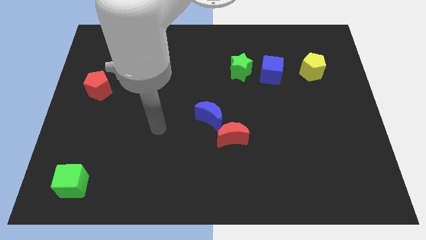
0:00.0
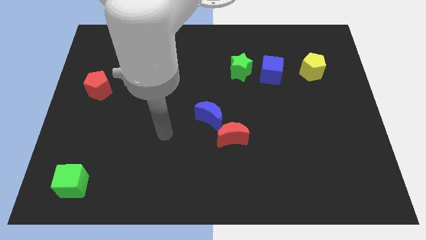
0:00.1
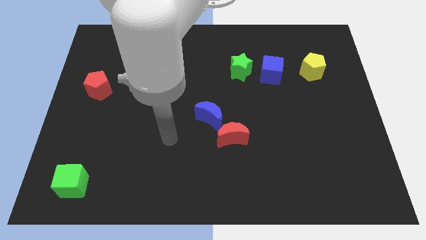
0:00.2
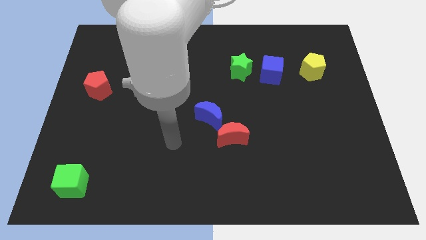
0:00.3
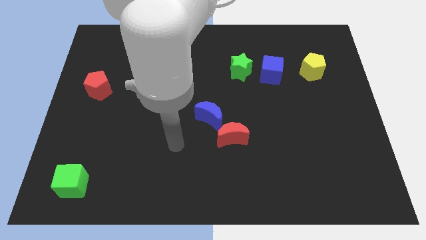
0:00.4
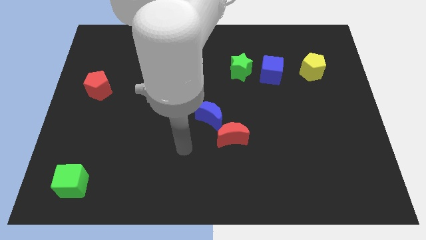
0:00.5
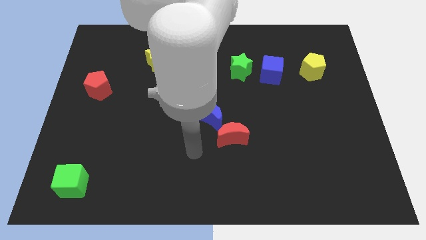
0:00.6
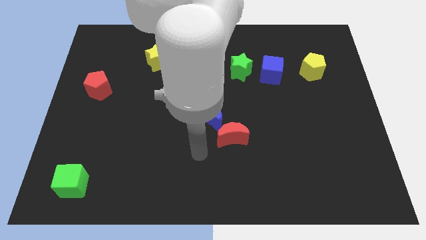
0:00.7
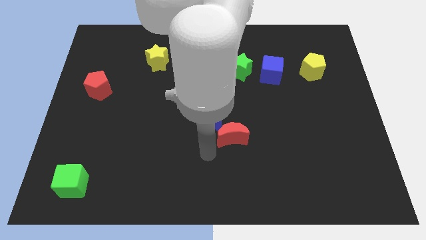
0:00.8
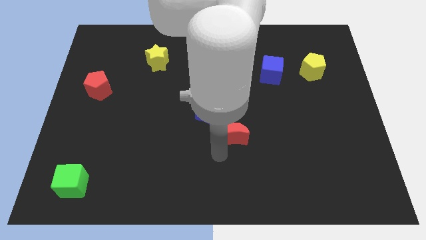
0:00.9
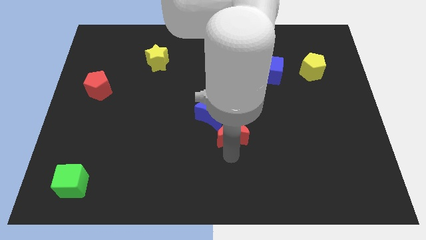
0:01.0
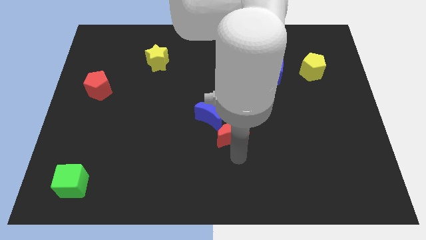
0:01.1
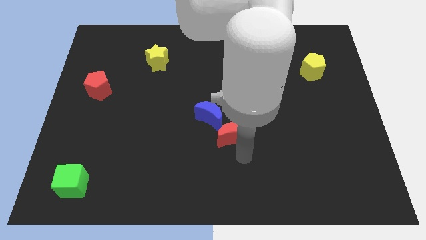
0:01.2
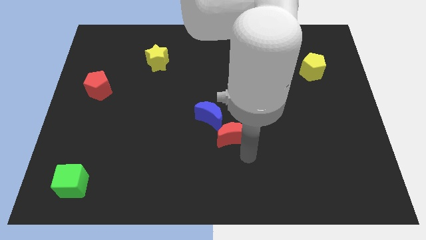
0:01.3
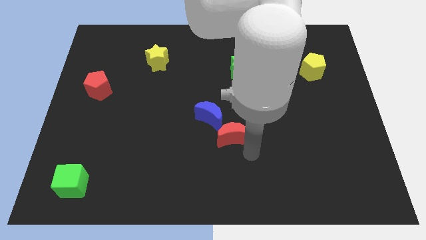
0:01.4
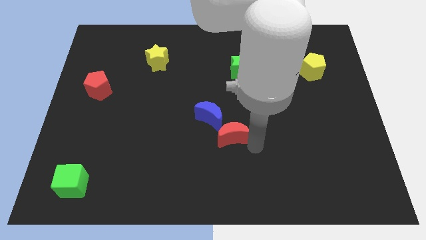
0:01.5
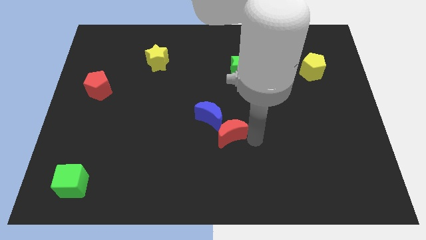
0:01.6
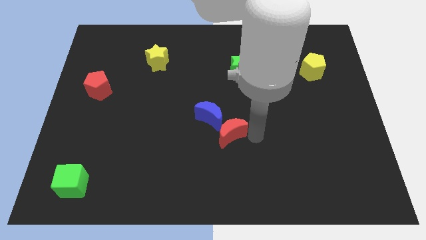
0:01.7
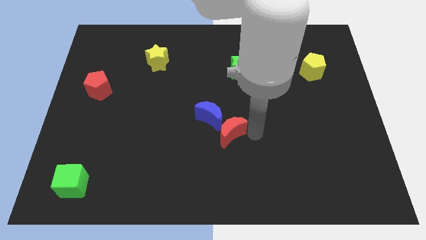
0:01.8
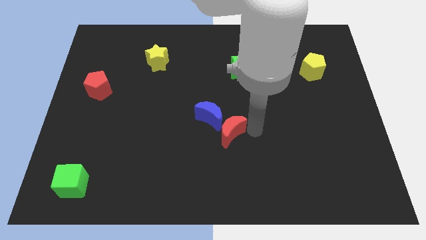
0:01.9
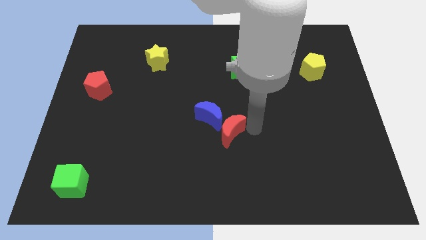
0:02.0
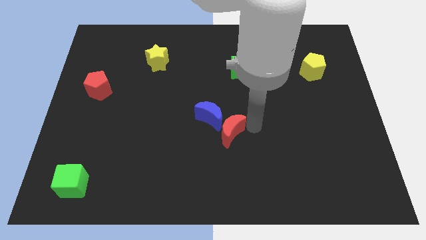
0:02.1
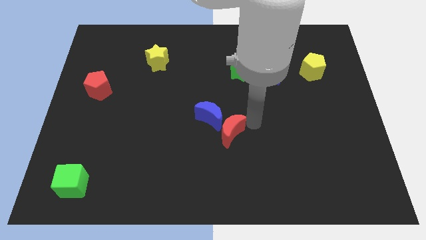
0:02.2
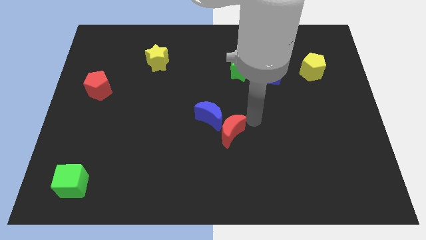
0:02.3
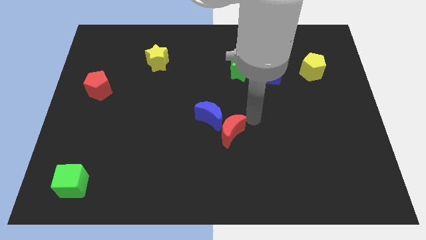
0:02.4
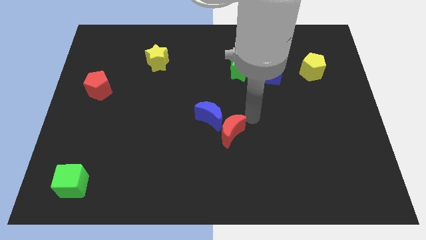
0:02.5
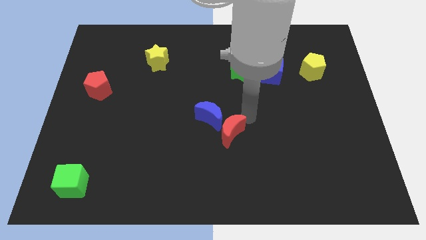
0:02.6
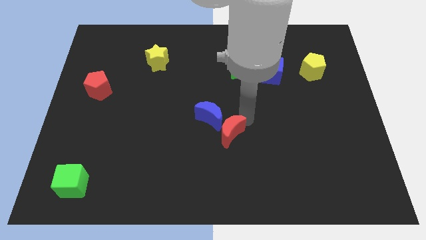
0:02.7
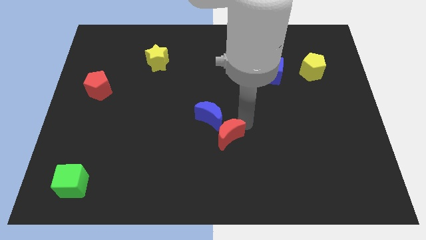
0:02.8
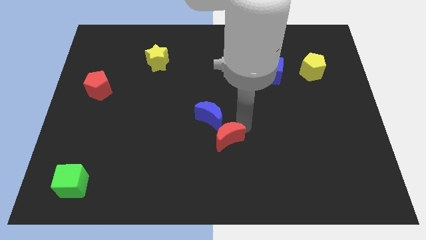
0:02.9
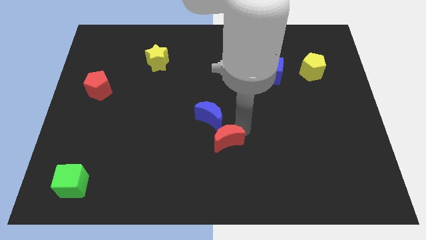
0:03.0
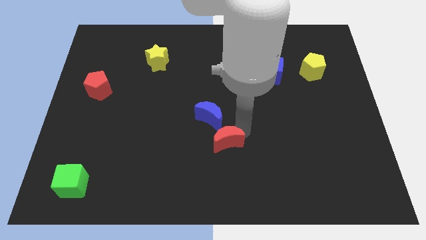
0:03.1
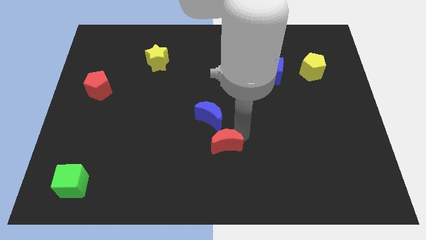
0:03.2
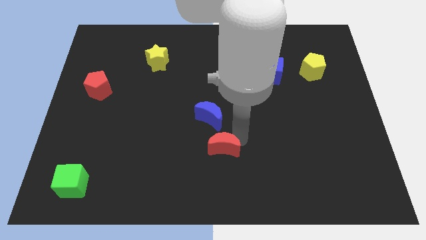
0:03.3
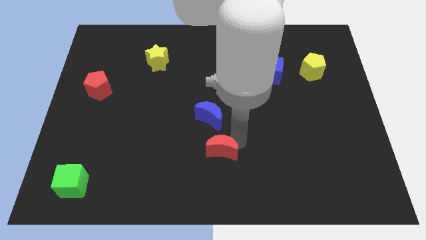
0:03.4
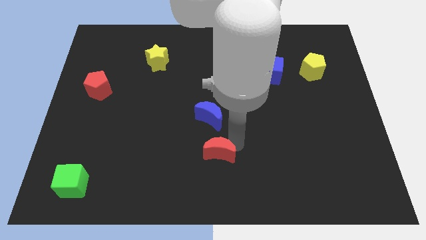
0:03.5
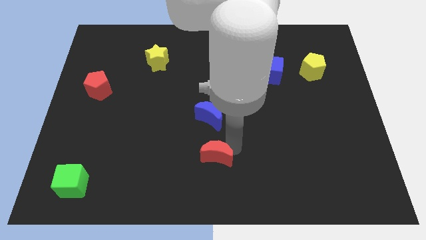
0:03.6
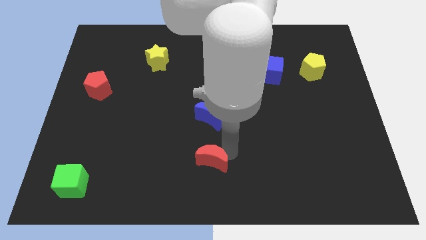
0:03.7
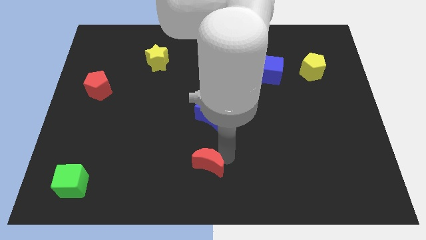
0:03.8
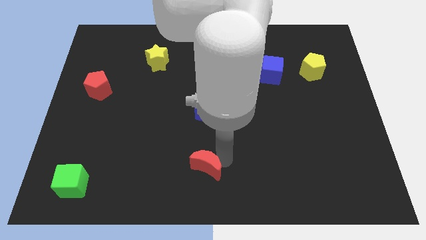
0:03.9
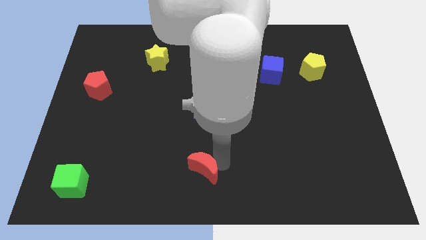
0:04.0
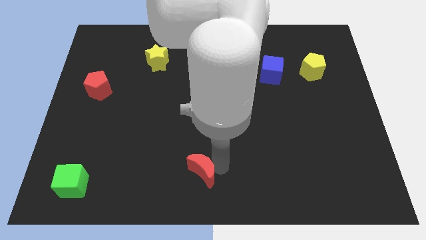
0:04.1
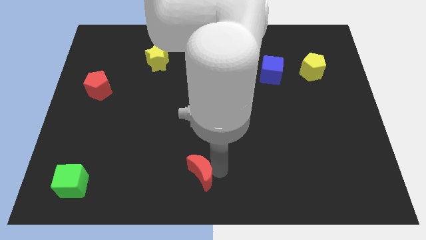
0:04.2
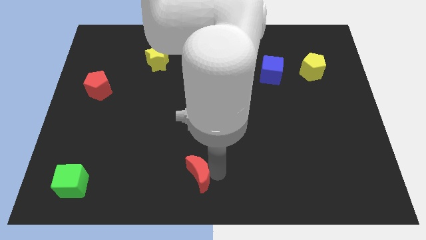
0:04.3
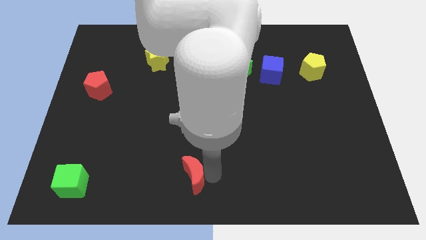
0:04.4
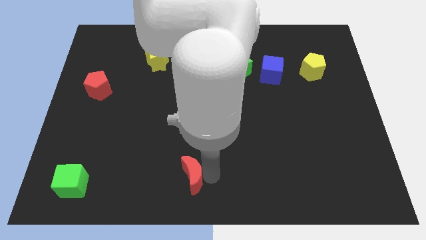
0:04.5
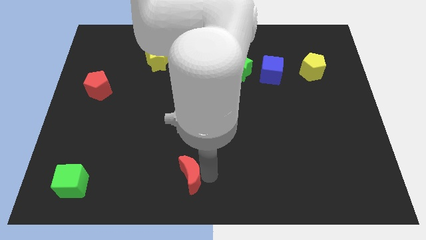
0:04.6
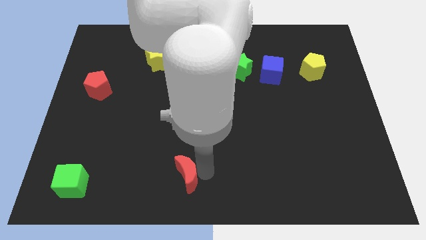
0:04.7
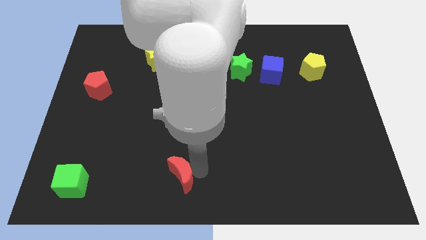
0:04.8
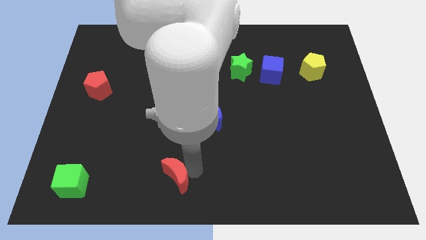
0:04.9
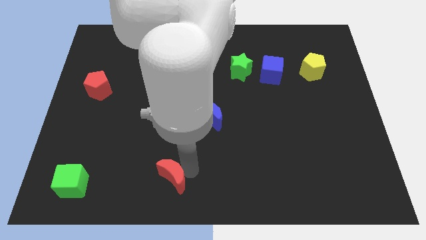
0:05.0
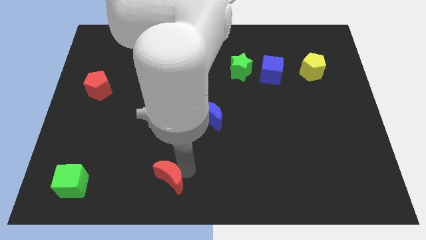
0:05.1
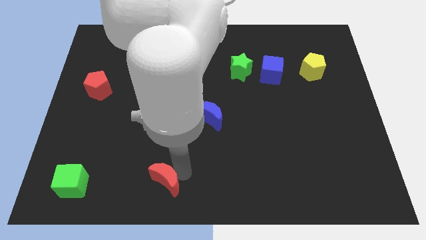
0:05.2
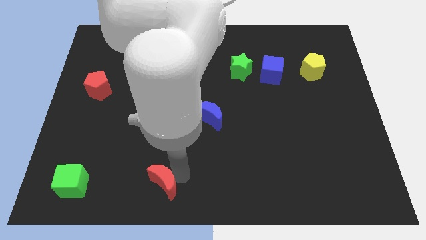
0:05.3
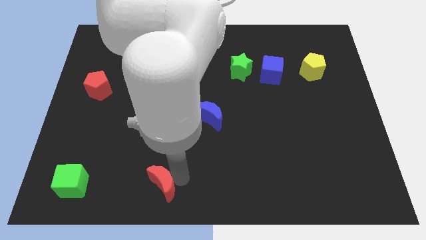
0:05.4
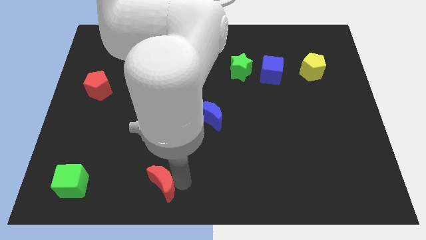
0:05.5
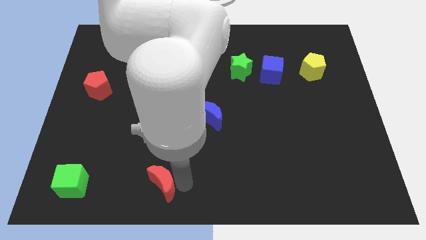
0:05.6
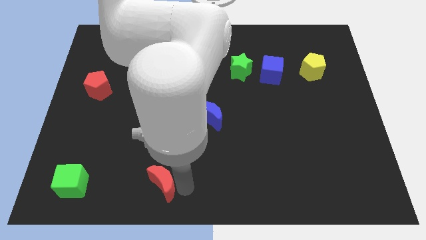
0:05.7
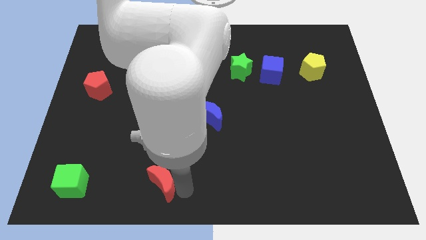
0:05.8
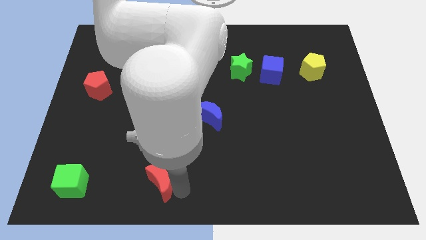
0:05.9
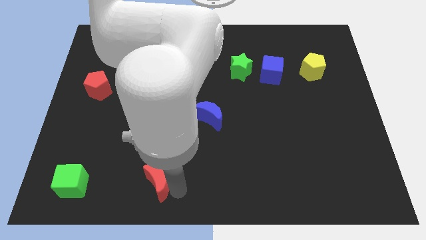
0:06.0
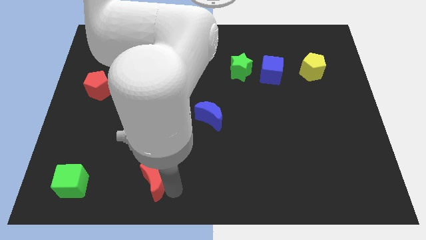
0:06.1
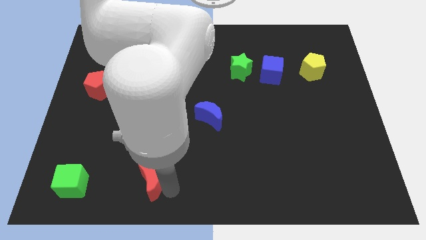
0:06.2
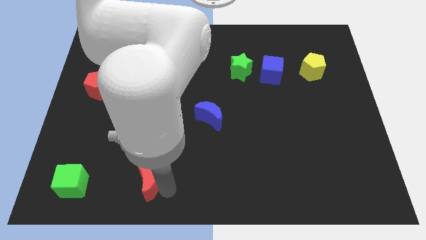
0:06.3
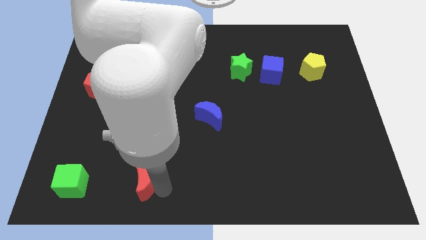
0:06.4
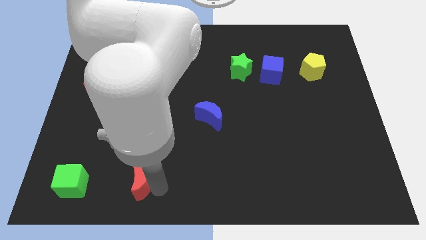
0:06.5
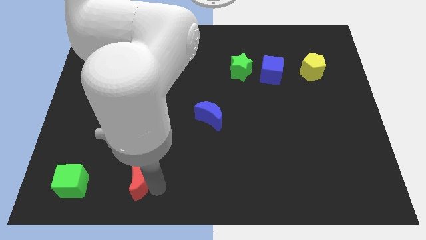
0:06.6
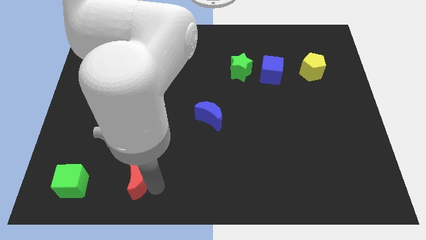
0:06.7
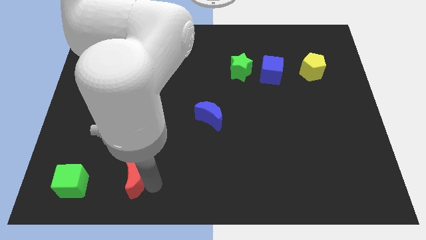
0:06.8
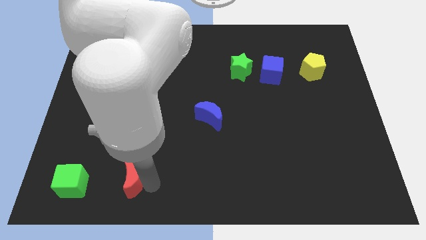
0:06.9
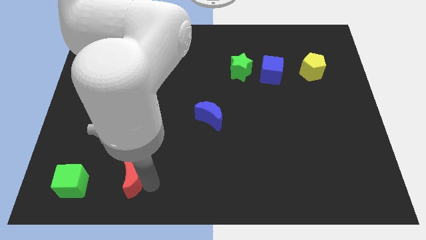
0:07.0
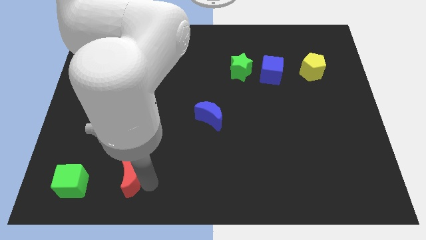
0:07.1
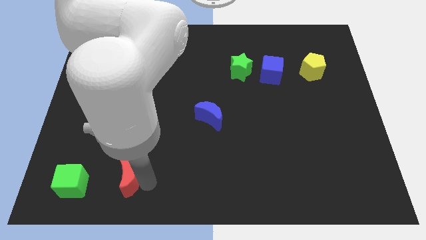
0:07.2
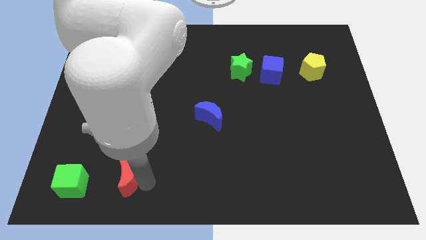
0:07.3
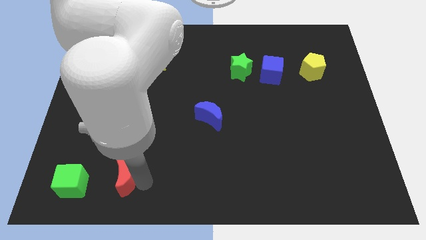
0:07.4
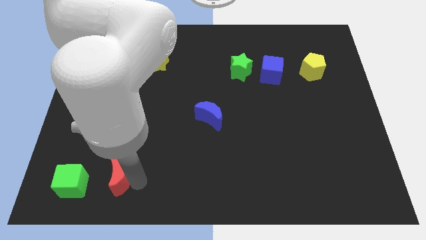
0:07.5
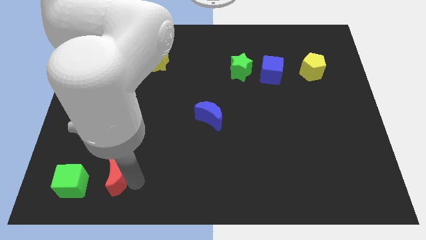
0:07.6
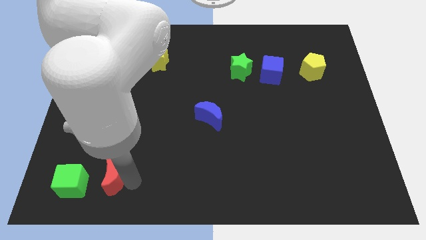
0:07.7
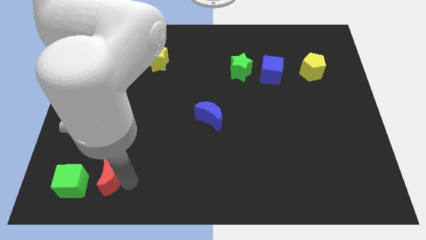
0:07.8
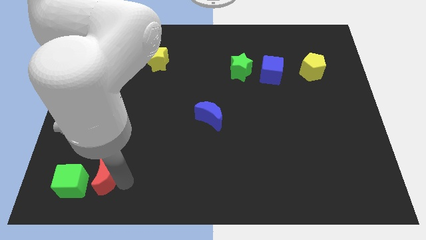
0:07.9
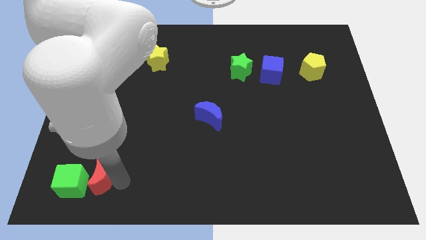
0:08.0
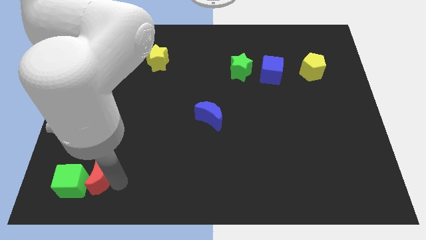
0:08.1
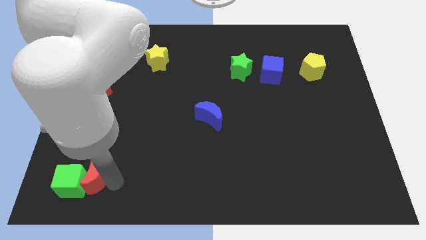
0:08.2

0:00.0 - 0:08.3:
move the red moon next to the green cube

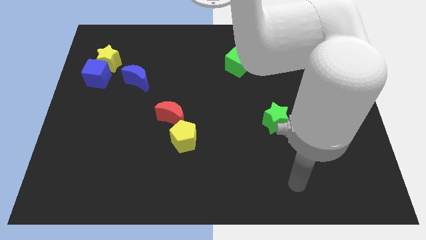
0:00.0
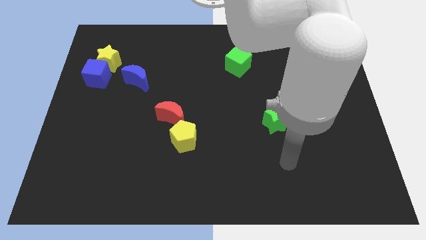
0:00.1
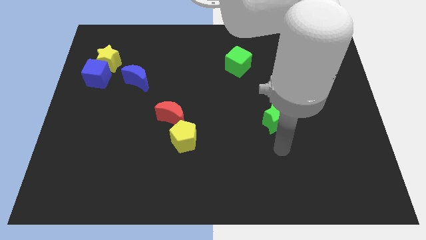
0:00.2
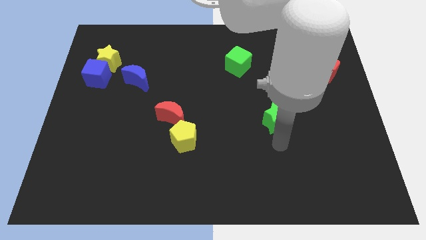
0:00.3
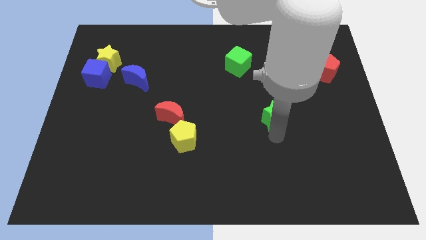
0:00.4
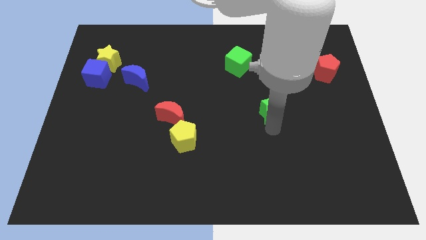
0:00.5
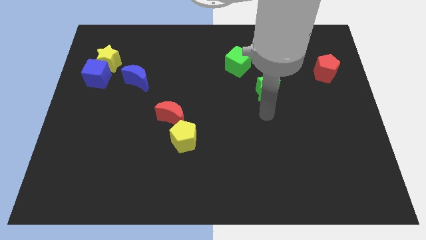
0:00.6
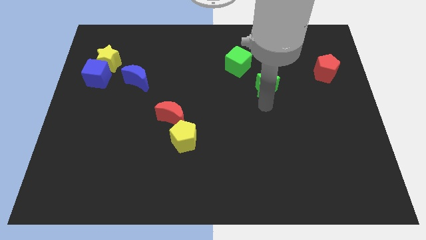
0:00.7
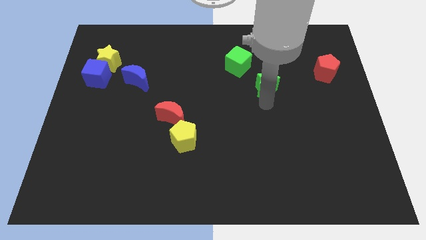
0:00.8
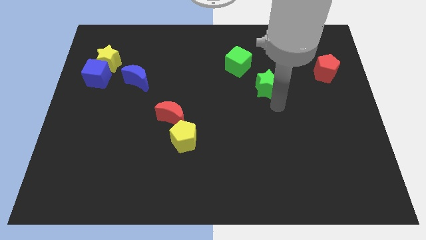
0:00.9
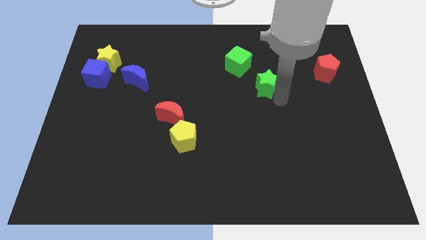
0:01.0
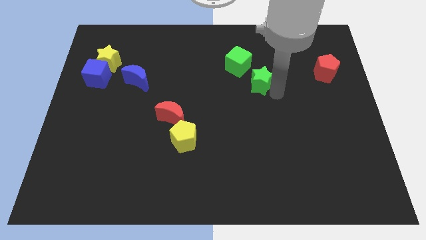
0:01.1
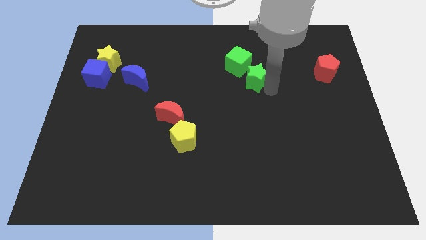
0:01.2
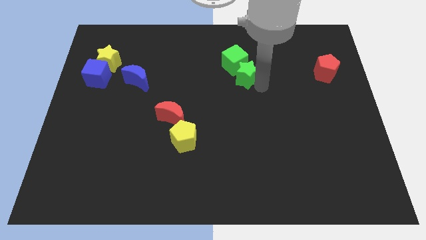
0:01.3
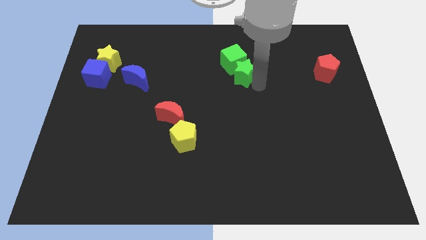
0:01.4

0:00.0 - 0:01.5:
slide the green star towards the green cube
